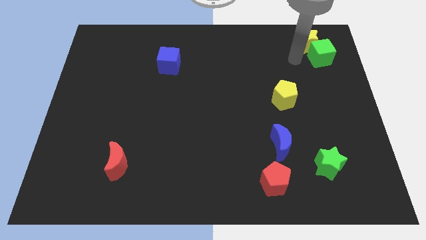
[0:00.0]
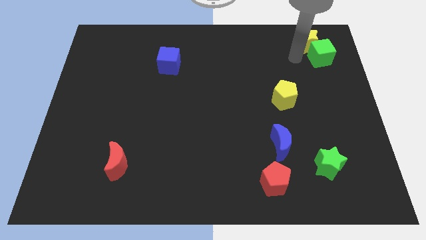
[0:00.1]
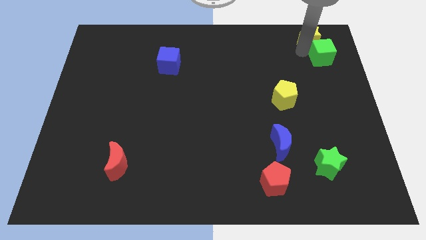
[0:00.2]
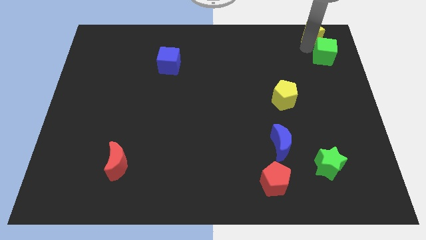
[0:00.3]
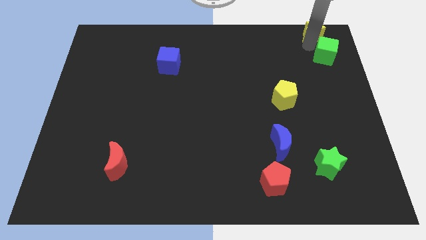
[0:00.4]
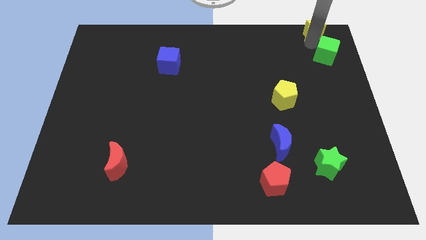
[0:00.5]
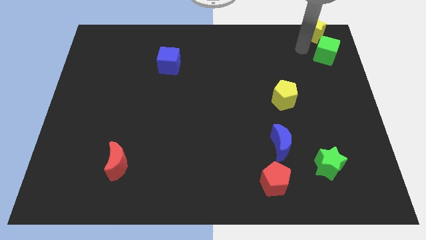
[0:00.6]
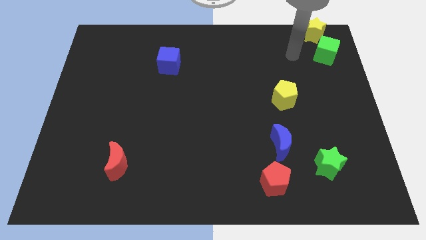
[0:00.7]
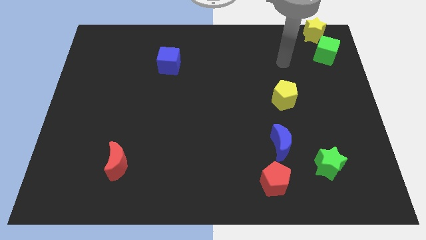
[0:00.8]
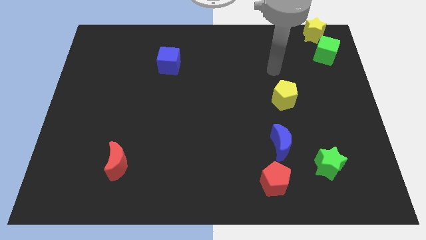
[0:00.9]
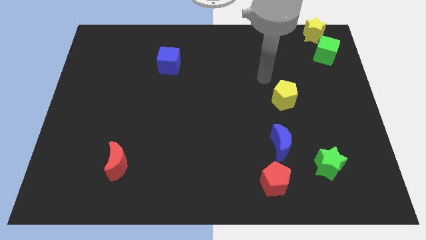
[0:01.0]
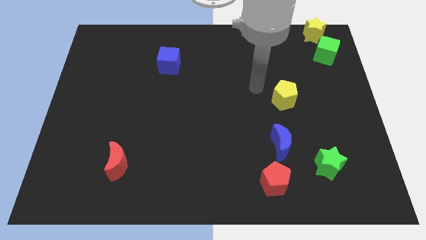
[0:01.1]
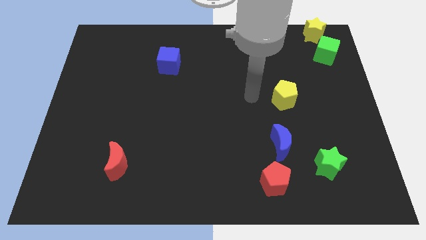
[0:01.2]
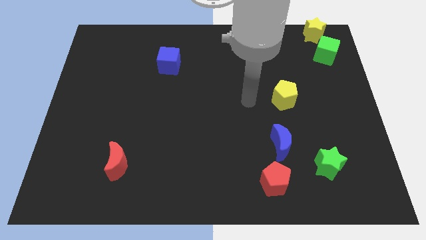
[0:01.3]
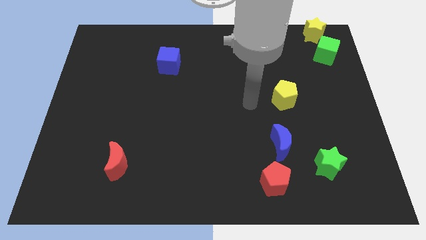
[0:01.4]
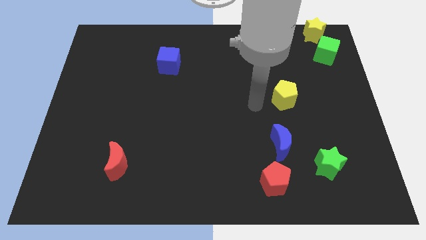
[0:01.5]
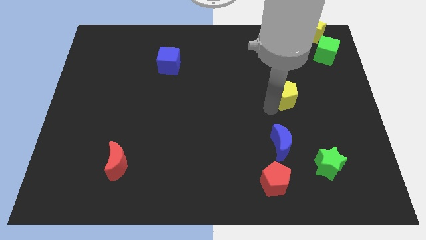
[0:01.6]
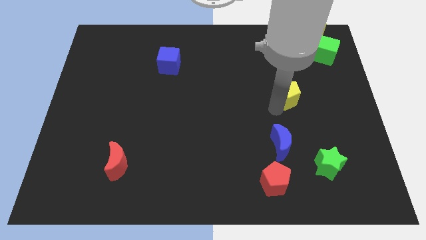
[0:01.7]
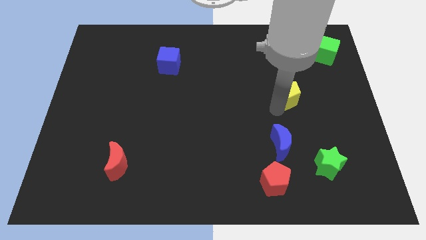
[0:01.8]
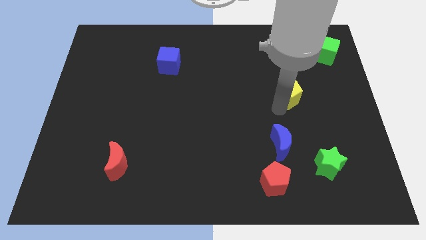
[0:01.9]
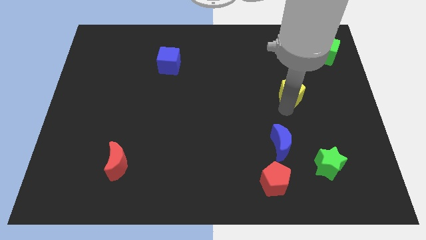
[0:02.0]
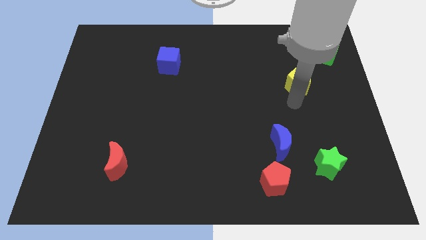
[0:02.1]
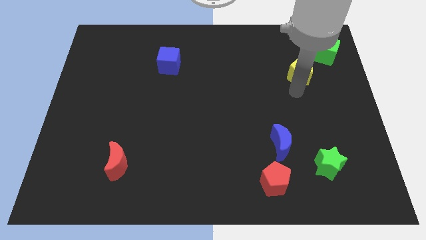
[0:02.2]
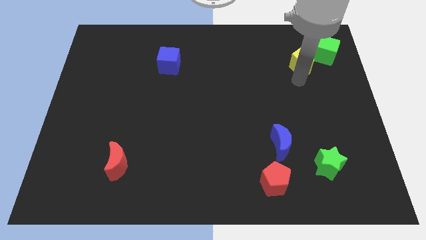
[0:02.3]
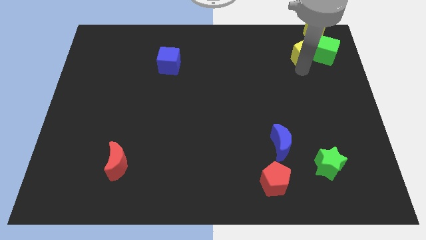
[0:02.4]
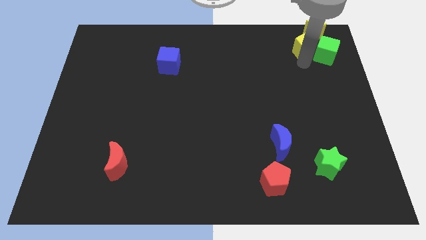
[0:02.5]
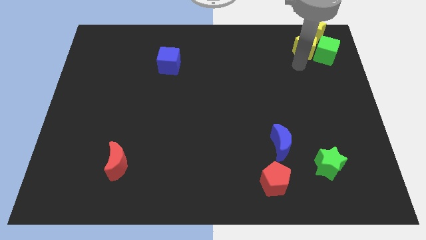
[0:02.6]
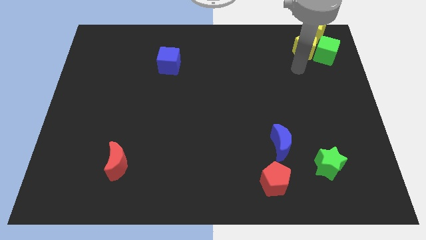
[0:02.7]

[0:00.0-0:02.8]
place yellow pentagon beside green cube

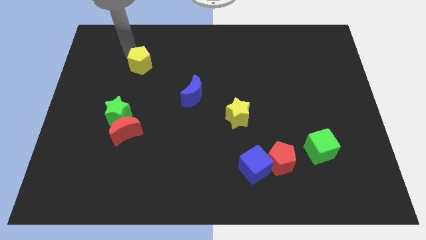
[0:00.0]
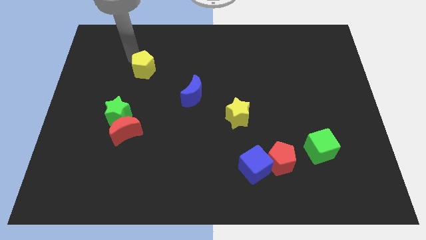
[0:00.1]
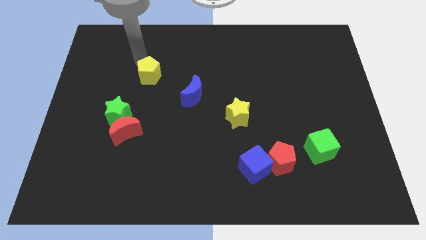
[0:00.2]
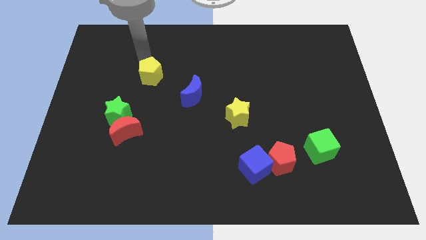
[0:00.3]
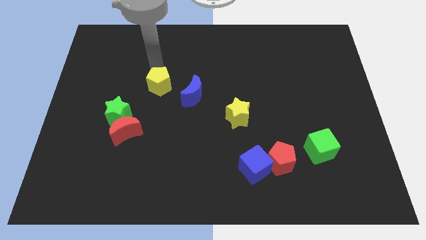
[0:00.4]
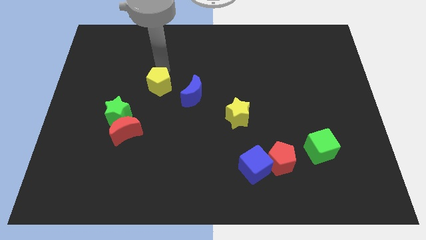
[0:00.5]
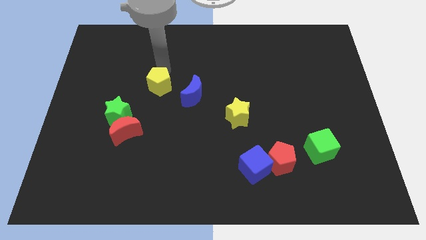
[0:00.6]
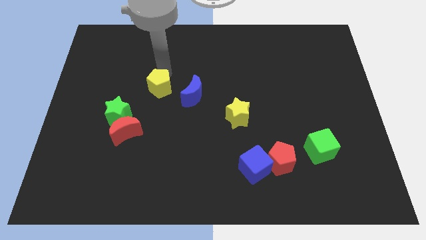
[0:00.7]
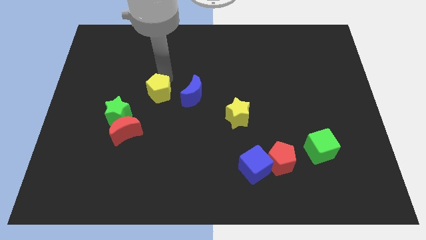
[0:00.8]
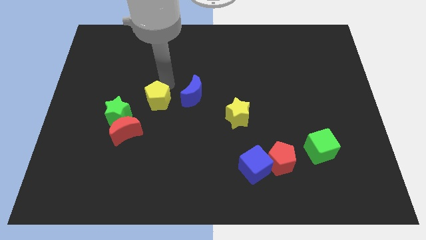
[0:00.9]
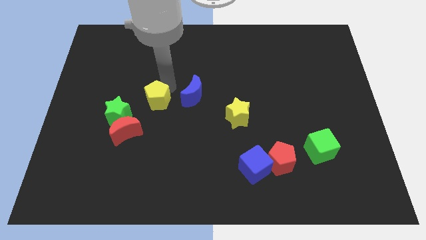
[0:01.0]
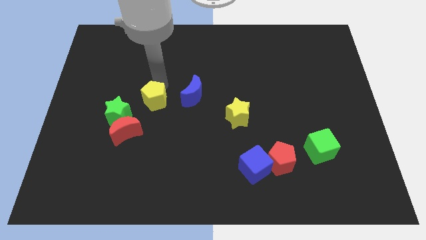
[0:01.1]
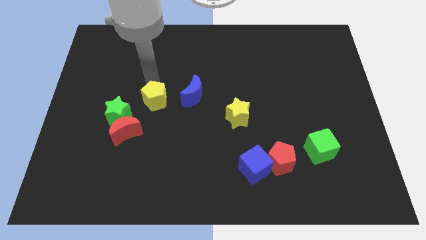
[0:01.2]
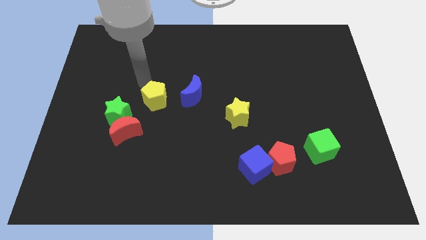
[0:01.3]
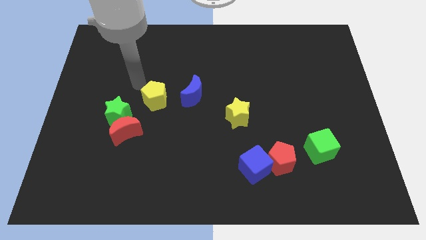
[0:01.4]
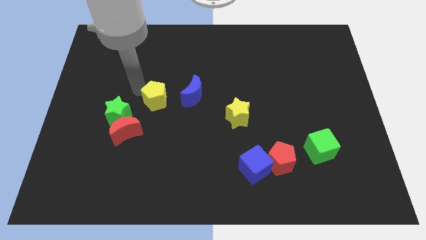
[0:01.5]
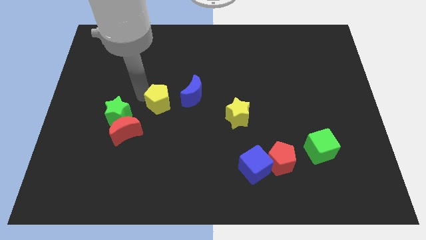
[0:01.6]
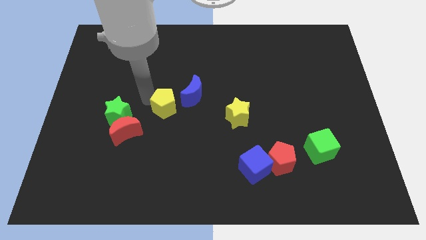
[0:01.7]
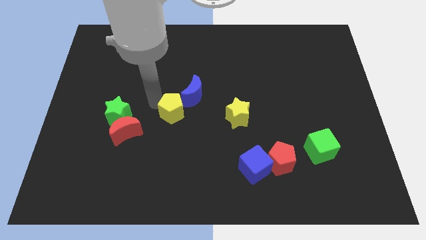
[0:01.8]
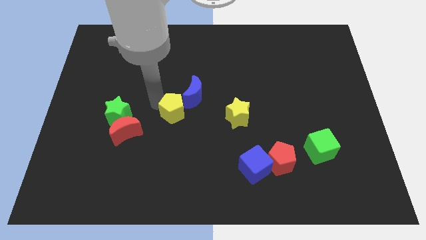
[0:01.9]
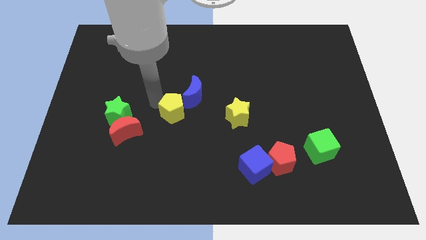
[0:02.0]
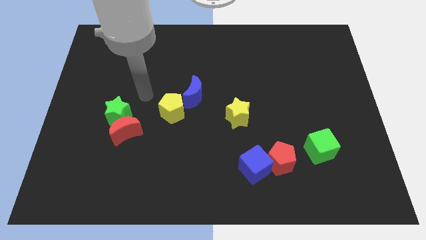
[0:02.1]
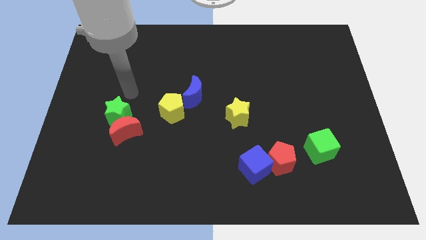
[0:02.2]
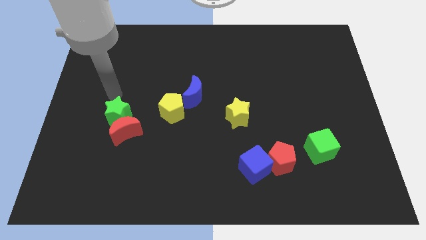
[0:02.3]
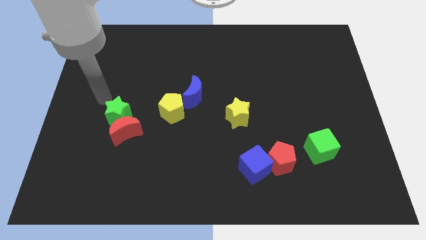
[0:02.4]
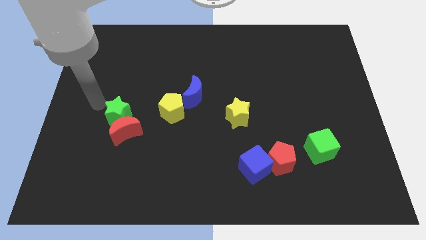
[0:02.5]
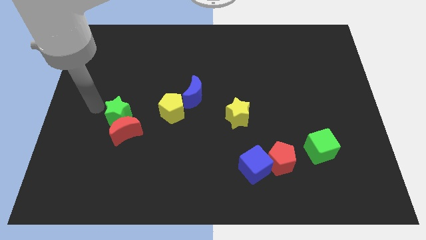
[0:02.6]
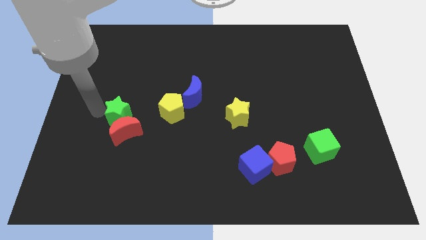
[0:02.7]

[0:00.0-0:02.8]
place the arm left to the green star

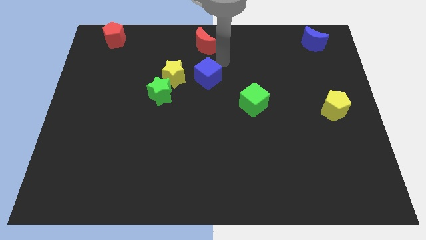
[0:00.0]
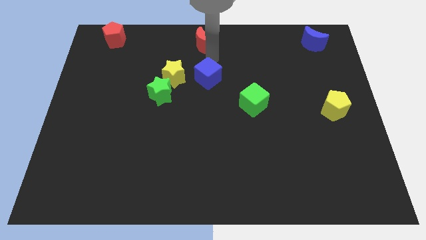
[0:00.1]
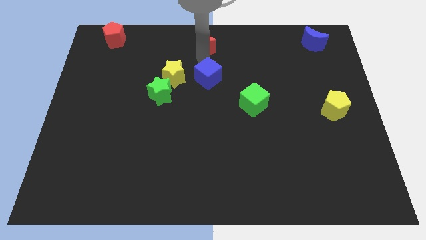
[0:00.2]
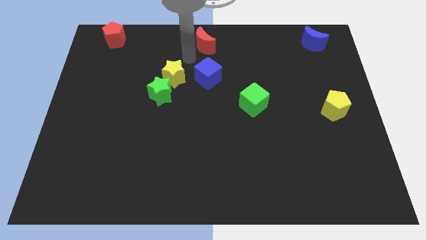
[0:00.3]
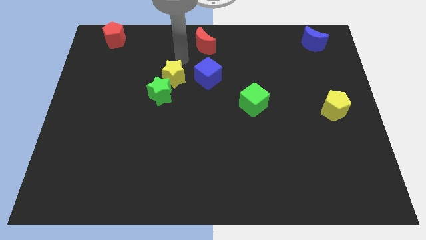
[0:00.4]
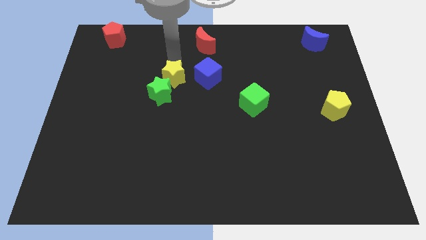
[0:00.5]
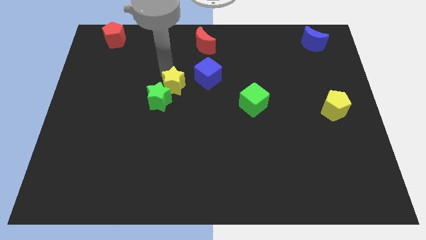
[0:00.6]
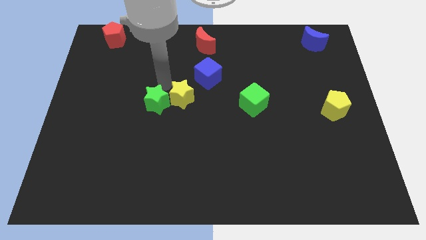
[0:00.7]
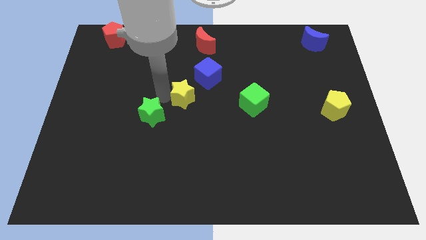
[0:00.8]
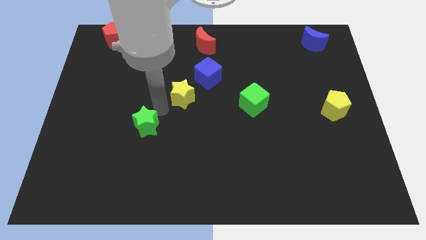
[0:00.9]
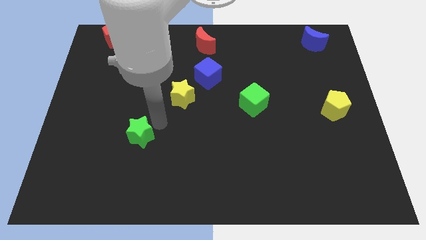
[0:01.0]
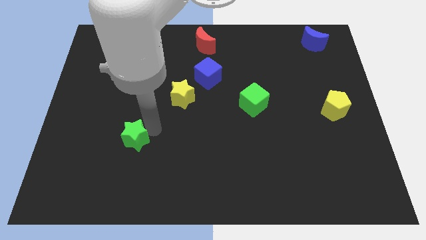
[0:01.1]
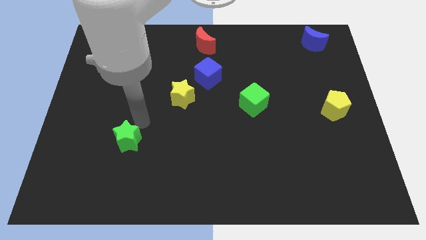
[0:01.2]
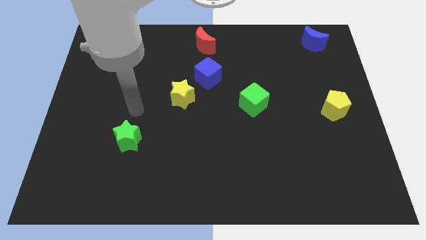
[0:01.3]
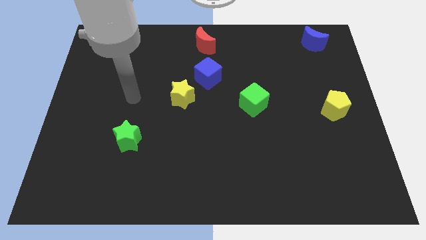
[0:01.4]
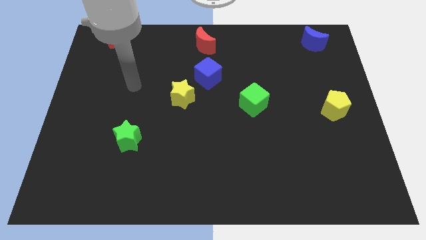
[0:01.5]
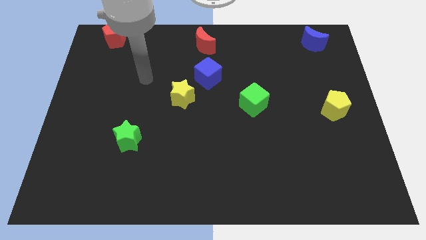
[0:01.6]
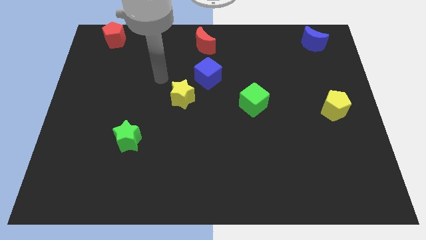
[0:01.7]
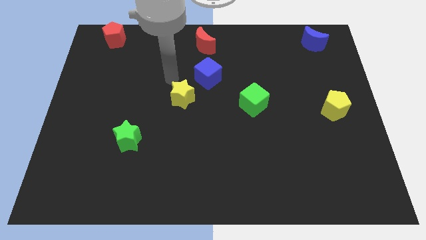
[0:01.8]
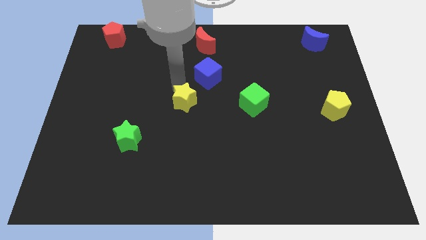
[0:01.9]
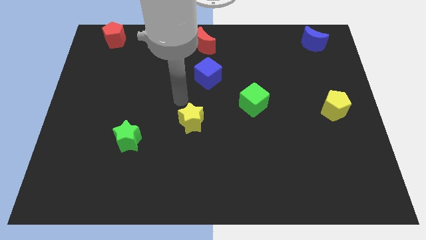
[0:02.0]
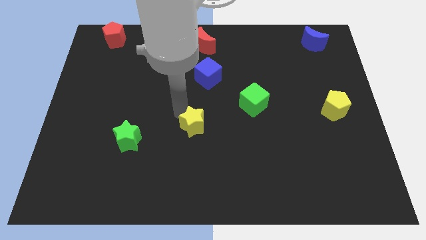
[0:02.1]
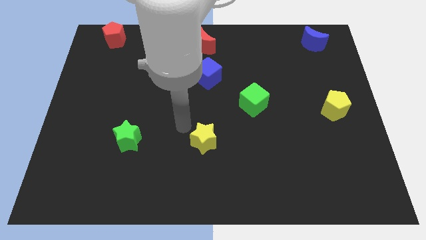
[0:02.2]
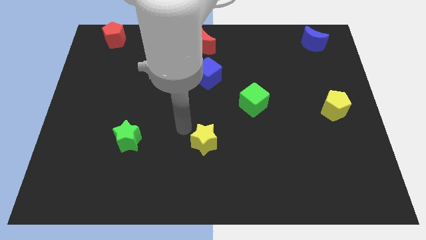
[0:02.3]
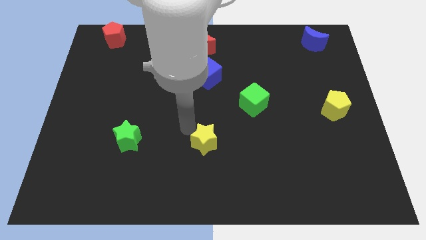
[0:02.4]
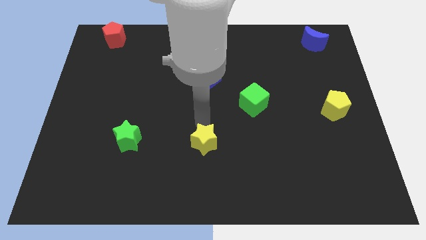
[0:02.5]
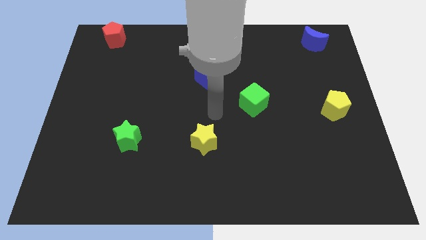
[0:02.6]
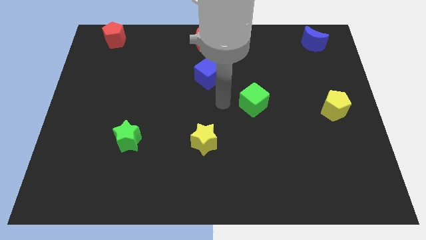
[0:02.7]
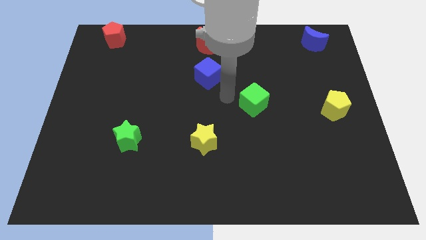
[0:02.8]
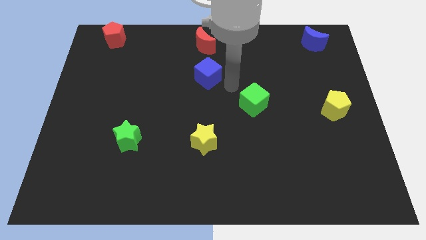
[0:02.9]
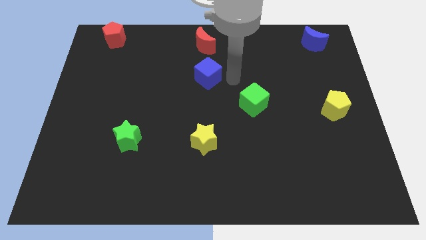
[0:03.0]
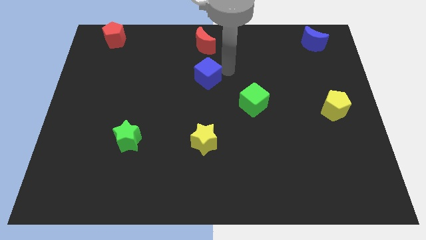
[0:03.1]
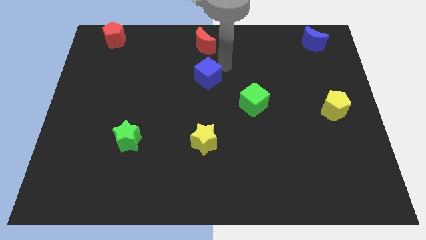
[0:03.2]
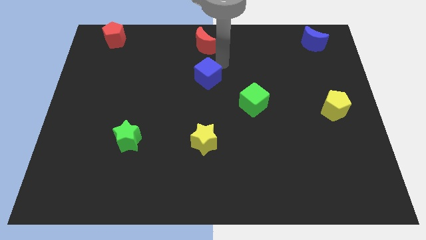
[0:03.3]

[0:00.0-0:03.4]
separate both the stars from present position

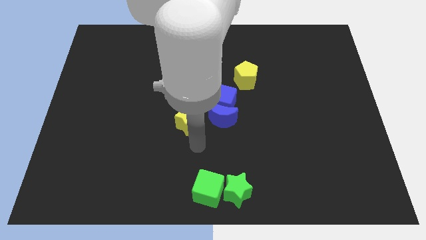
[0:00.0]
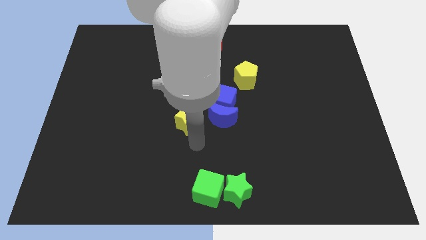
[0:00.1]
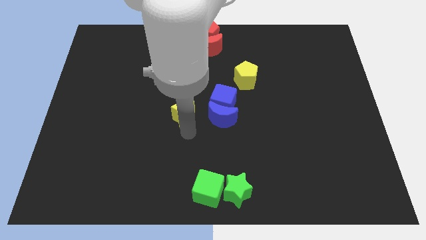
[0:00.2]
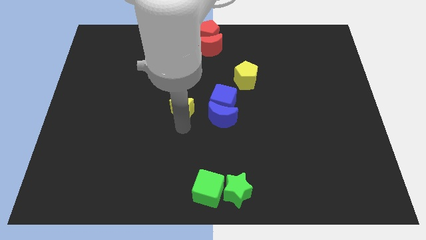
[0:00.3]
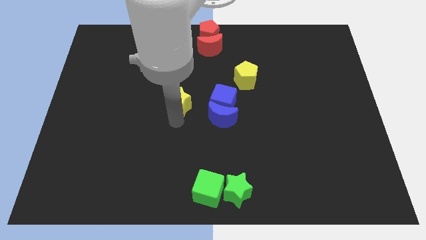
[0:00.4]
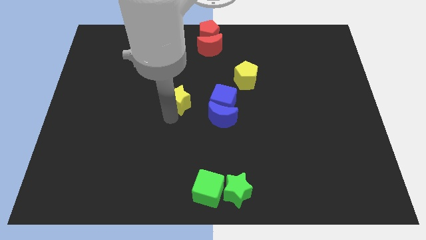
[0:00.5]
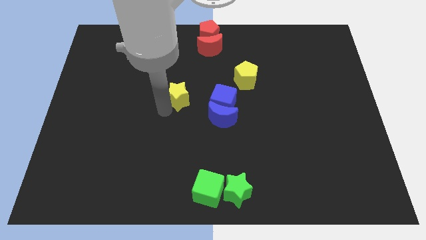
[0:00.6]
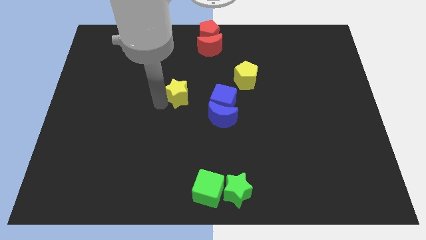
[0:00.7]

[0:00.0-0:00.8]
place the yellow star to the left side of the blue cube
